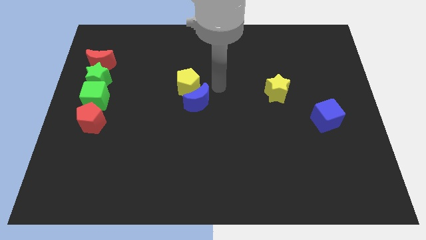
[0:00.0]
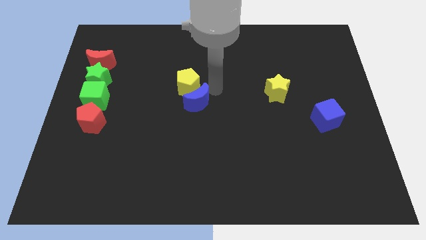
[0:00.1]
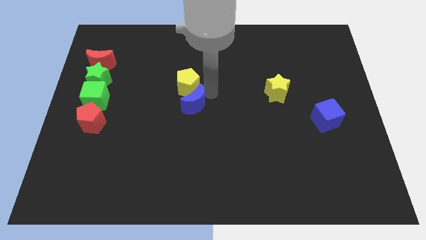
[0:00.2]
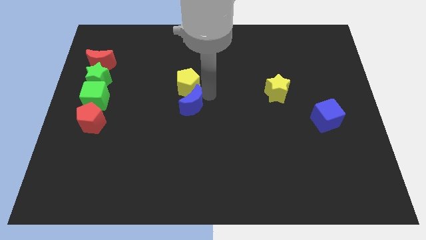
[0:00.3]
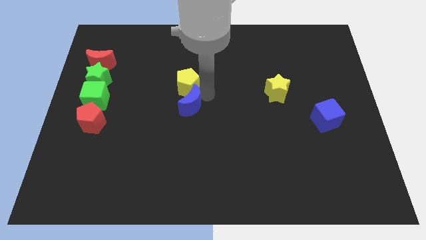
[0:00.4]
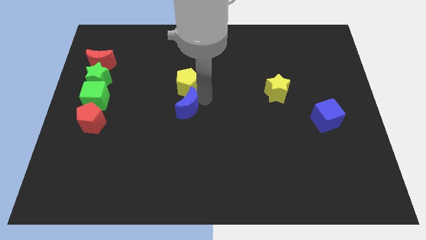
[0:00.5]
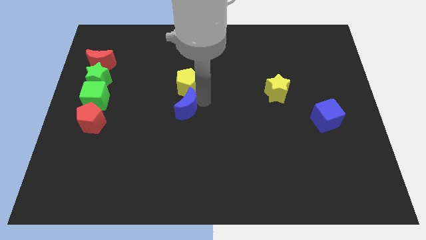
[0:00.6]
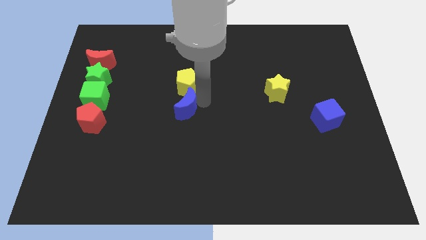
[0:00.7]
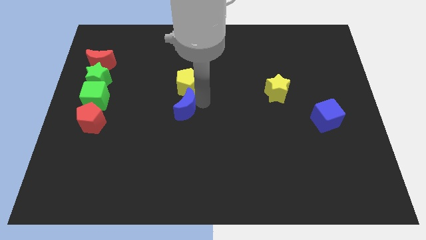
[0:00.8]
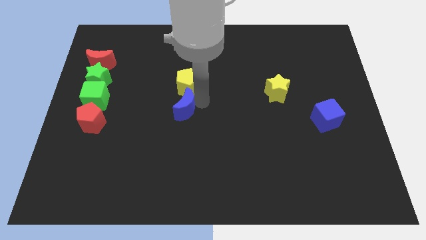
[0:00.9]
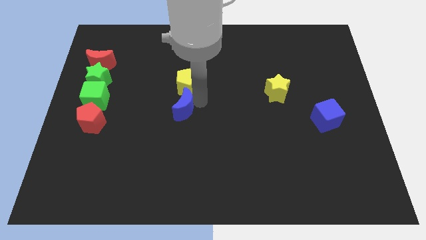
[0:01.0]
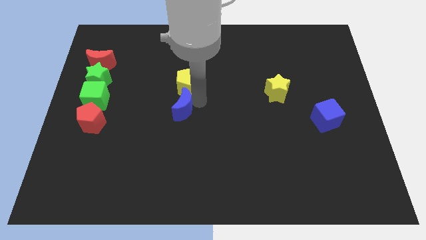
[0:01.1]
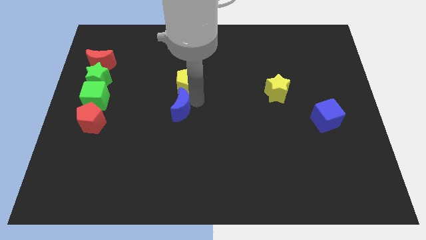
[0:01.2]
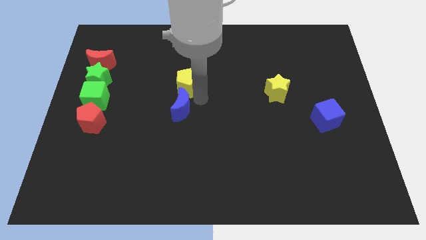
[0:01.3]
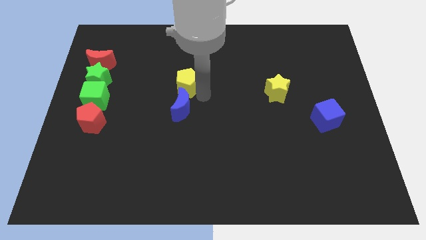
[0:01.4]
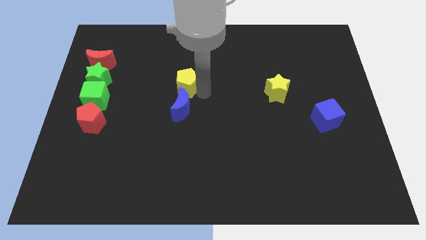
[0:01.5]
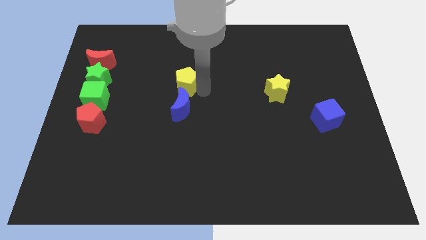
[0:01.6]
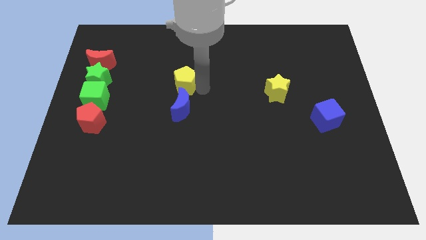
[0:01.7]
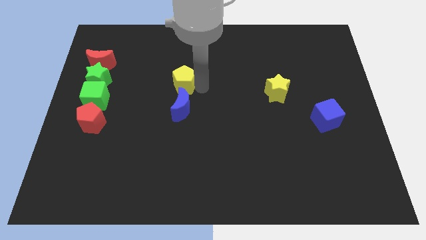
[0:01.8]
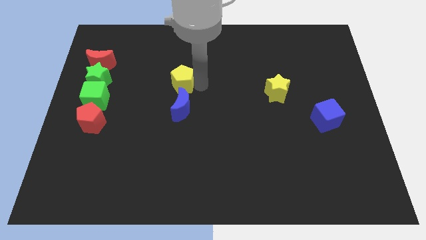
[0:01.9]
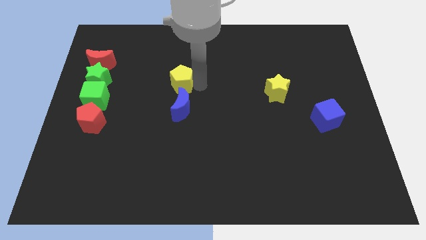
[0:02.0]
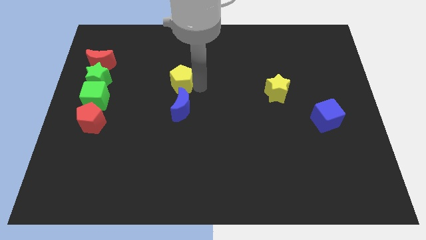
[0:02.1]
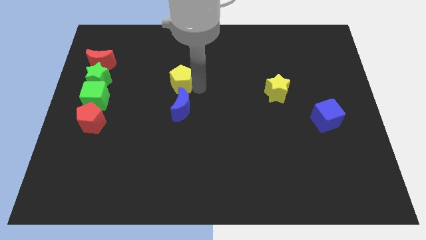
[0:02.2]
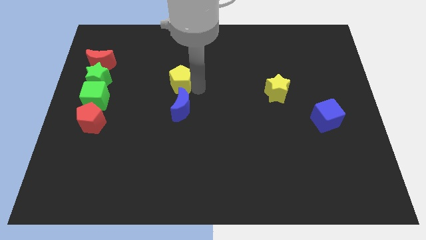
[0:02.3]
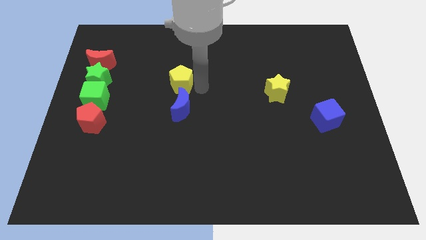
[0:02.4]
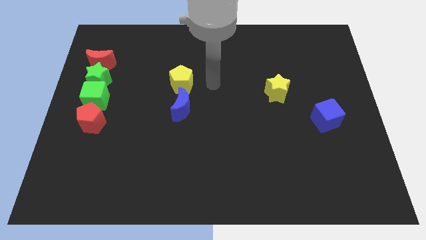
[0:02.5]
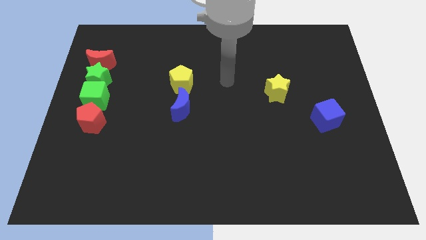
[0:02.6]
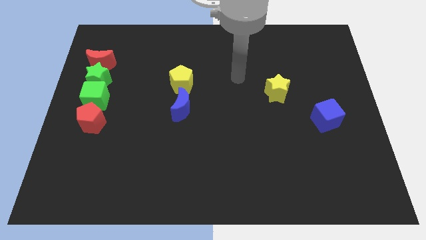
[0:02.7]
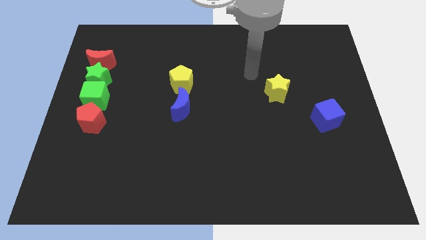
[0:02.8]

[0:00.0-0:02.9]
push blue crescent slightly towards left side

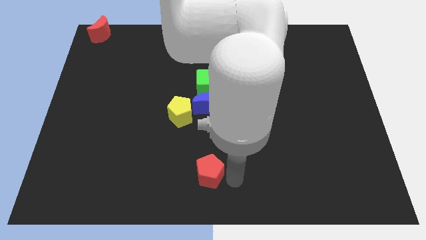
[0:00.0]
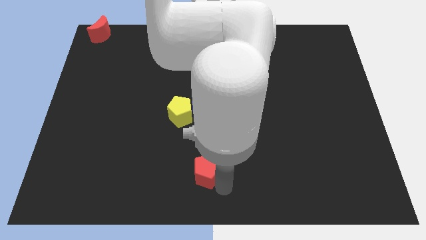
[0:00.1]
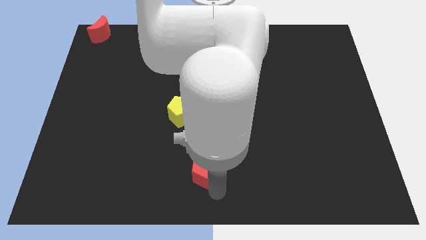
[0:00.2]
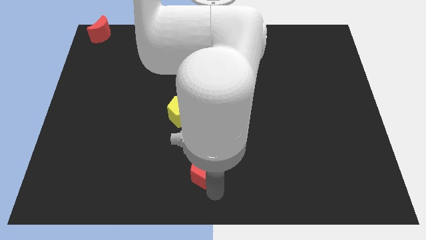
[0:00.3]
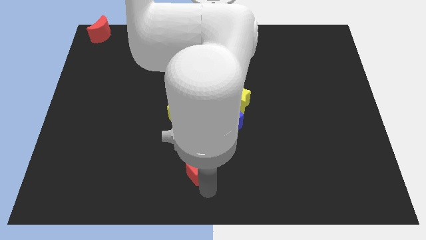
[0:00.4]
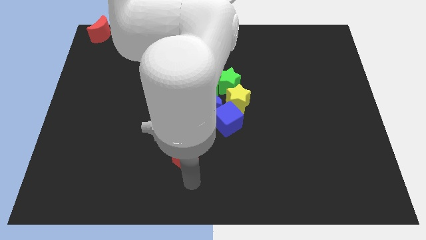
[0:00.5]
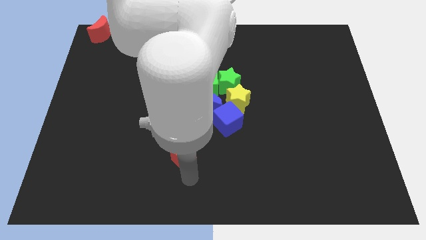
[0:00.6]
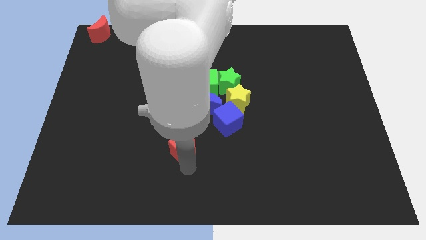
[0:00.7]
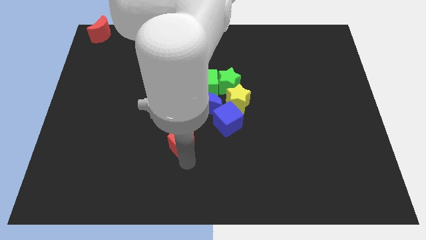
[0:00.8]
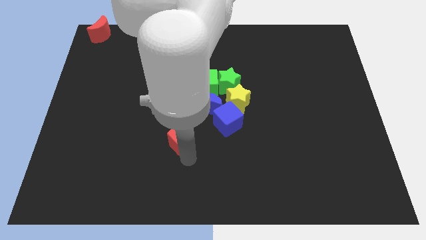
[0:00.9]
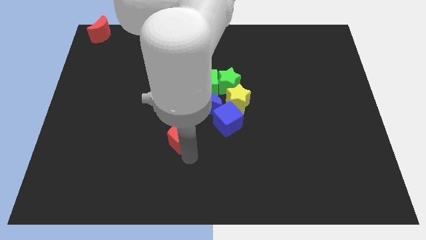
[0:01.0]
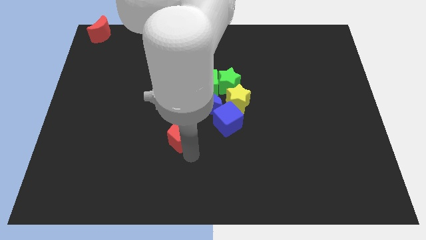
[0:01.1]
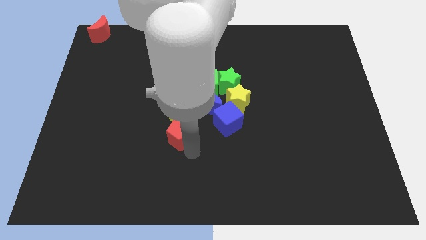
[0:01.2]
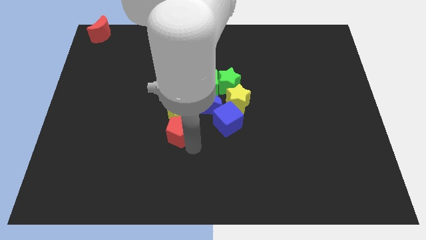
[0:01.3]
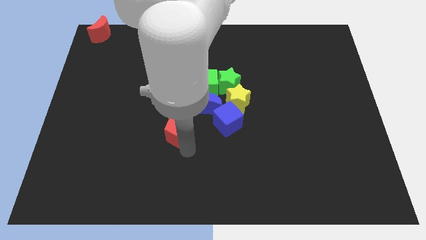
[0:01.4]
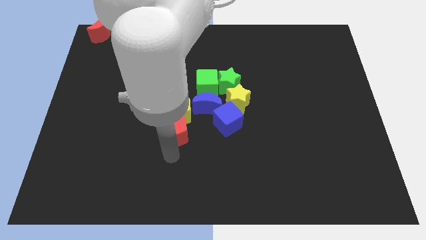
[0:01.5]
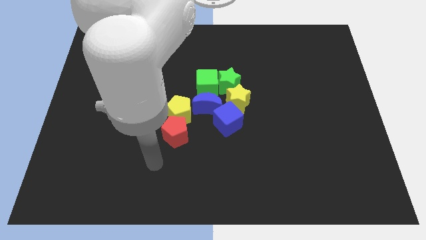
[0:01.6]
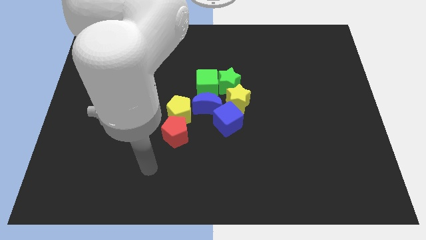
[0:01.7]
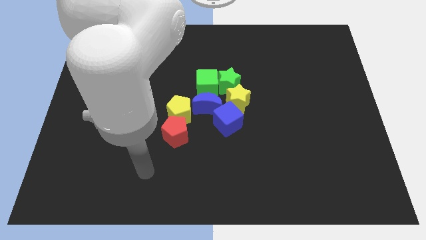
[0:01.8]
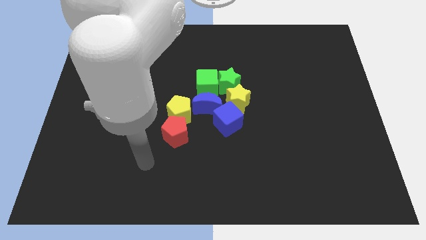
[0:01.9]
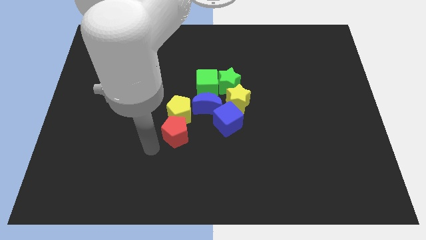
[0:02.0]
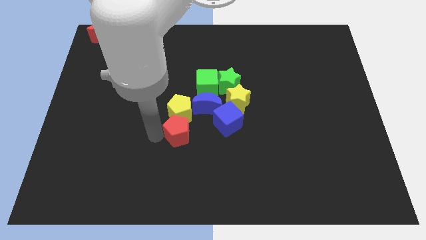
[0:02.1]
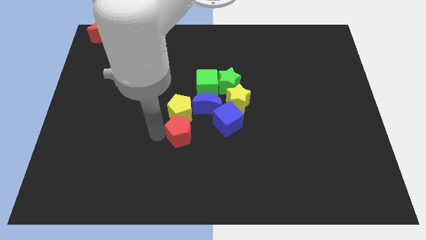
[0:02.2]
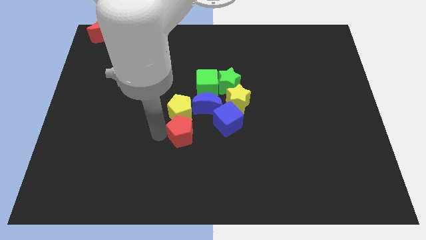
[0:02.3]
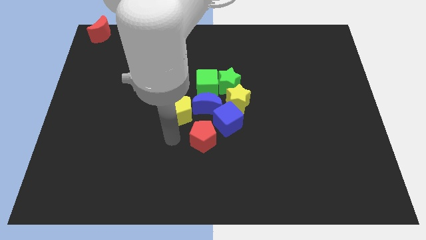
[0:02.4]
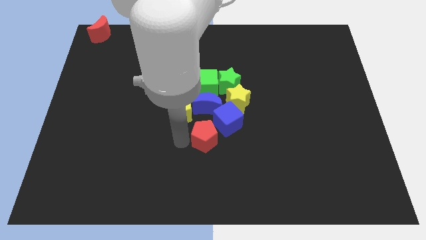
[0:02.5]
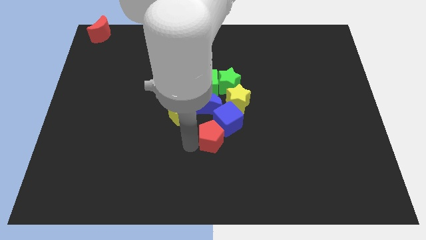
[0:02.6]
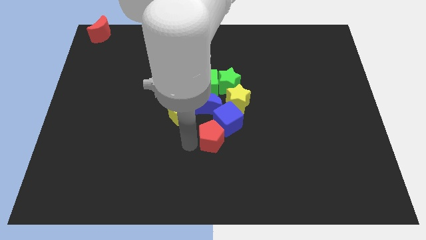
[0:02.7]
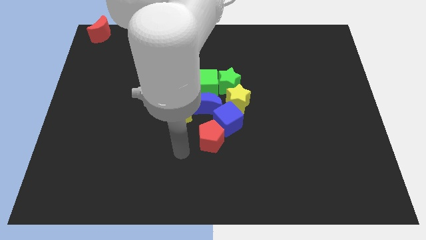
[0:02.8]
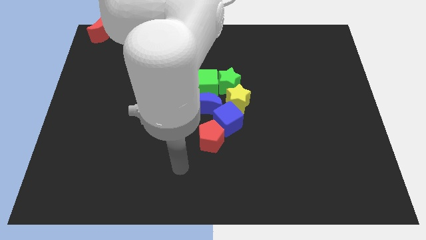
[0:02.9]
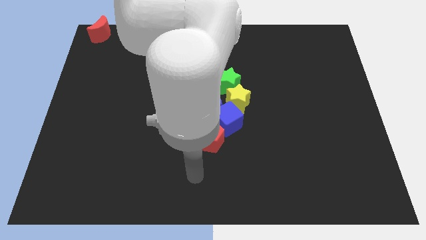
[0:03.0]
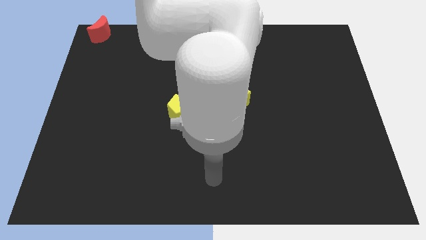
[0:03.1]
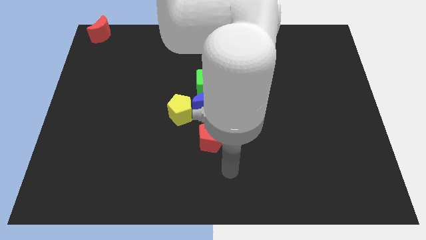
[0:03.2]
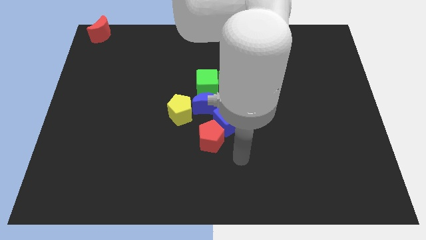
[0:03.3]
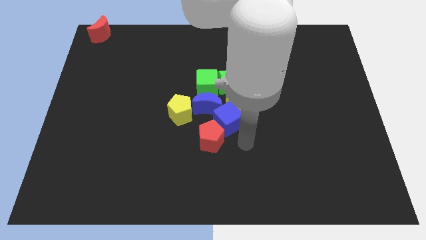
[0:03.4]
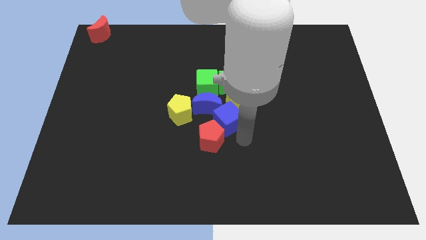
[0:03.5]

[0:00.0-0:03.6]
push the red pentagon diagonal below the blue cube

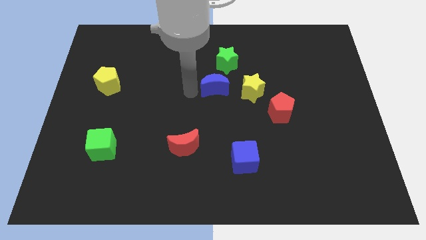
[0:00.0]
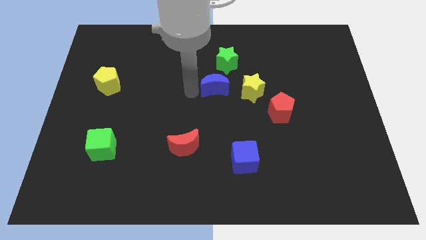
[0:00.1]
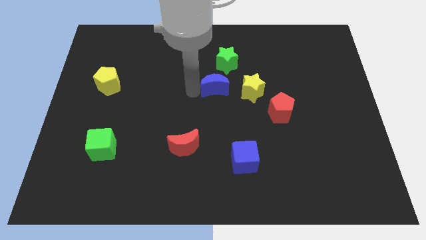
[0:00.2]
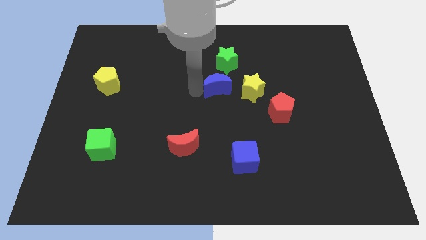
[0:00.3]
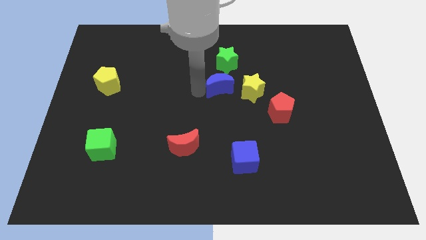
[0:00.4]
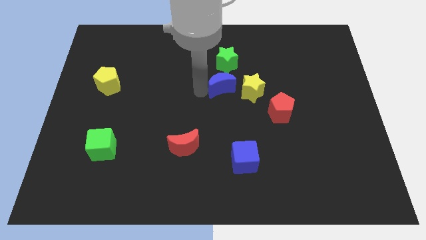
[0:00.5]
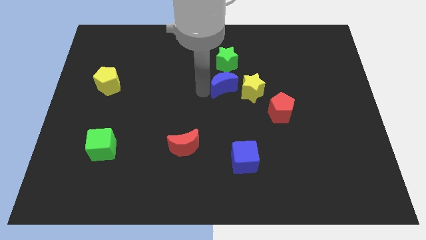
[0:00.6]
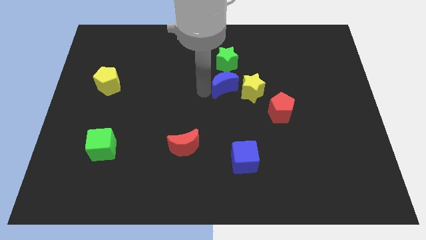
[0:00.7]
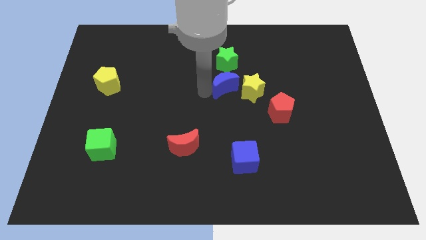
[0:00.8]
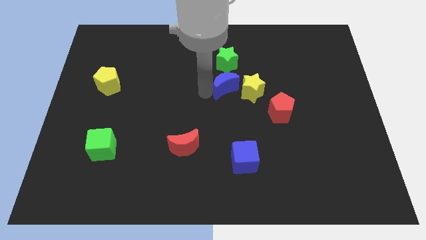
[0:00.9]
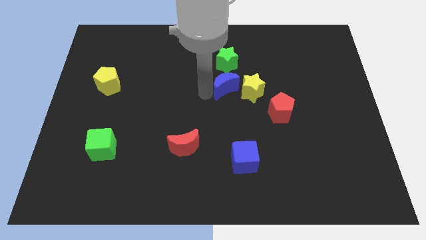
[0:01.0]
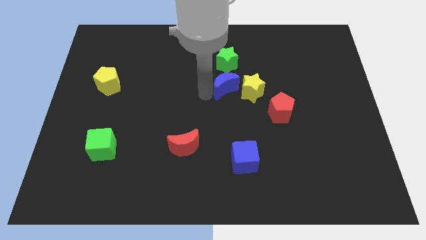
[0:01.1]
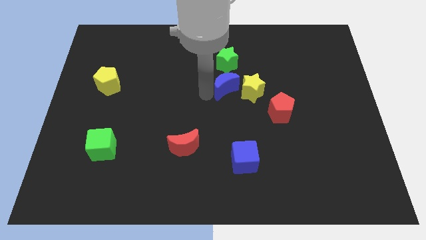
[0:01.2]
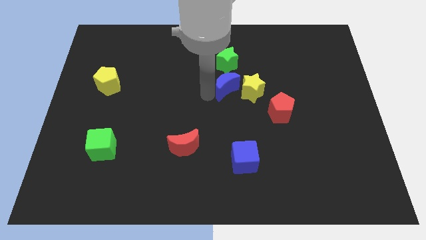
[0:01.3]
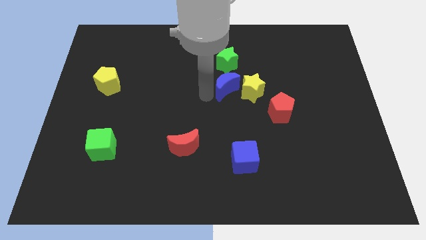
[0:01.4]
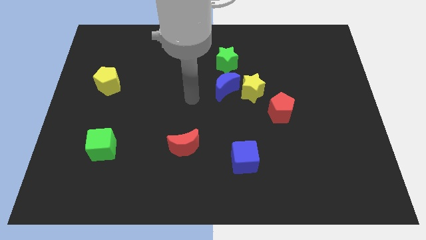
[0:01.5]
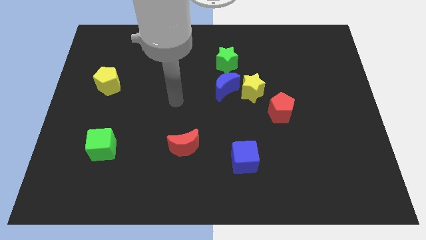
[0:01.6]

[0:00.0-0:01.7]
push the blue crescent towards the left side of the yellow star

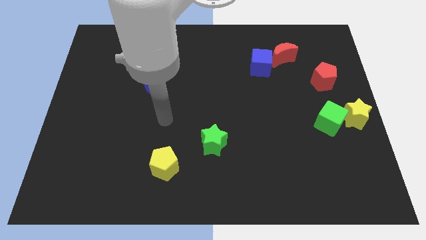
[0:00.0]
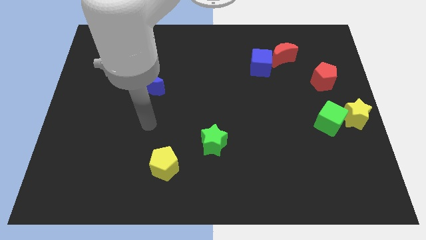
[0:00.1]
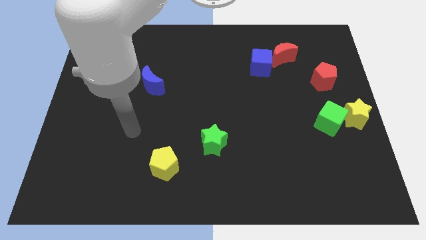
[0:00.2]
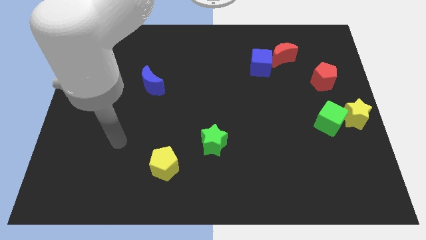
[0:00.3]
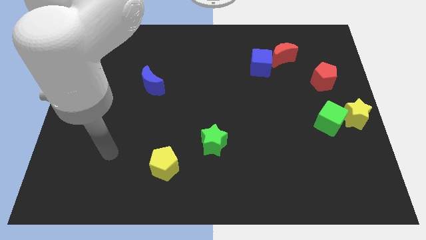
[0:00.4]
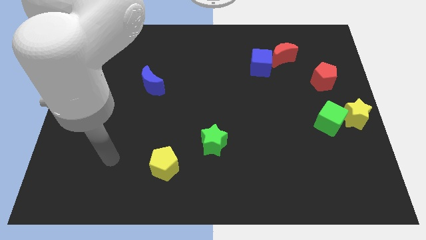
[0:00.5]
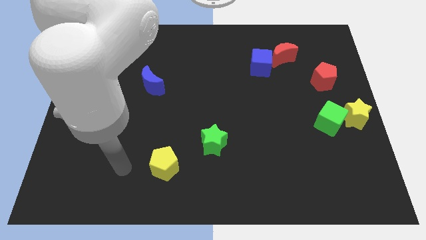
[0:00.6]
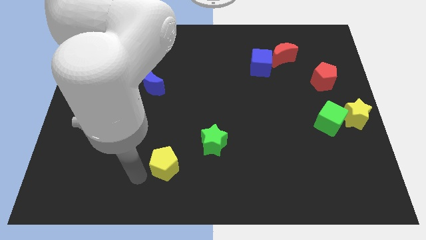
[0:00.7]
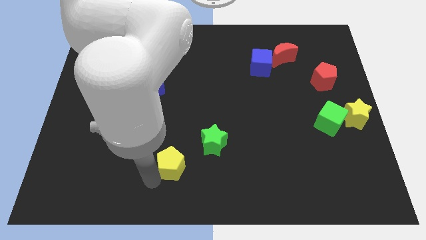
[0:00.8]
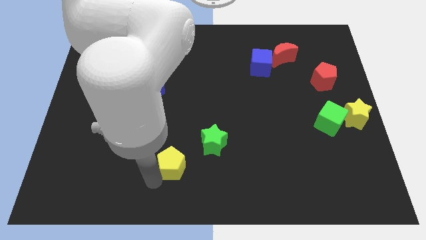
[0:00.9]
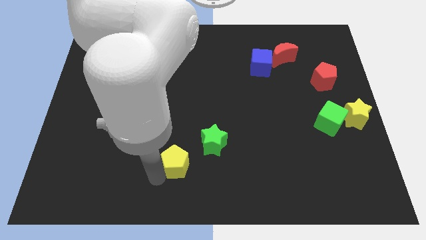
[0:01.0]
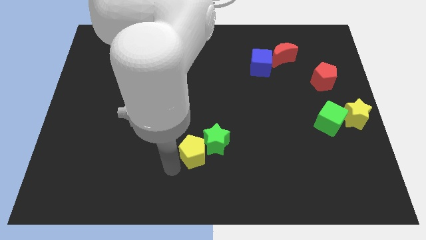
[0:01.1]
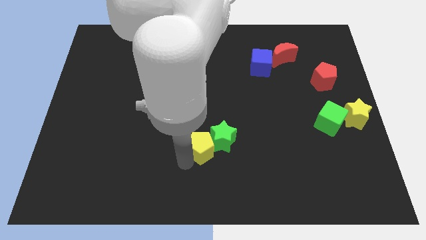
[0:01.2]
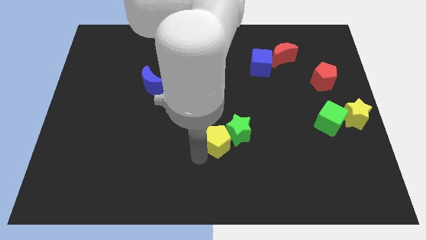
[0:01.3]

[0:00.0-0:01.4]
push the yellow pentagon into the green star
